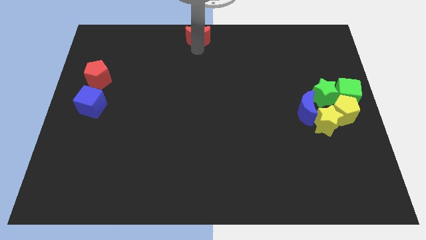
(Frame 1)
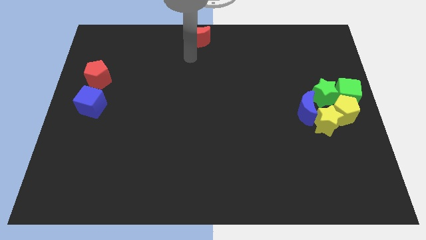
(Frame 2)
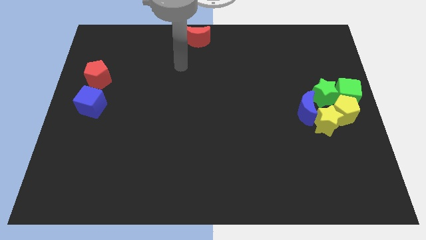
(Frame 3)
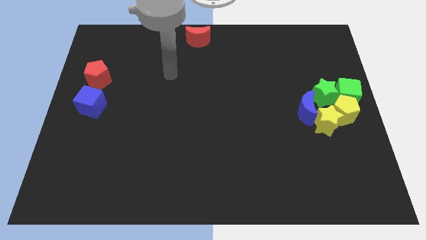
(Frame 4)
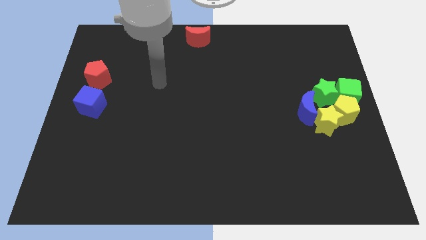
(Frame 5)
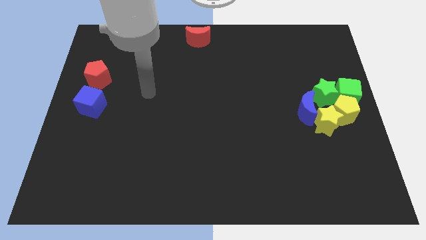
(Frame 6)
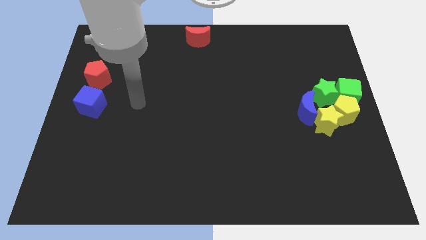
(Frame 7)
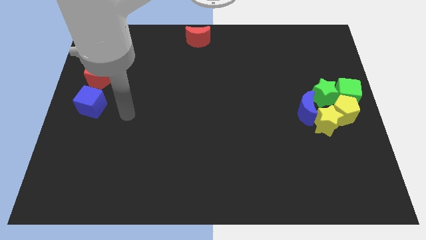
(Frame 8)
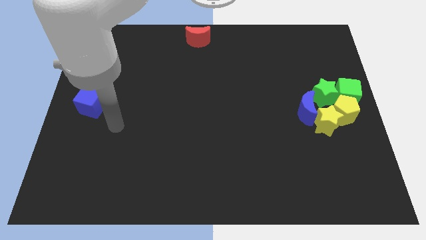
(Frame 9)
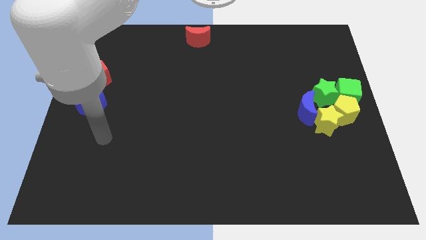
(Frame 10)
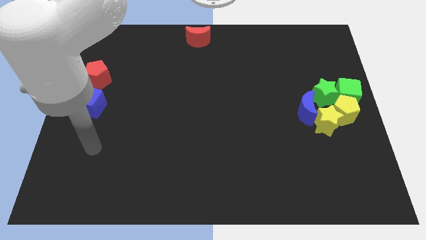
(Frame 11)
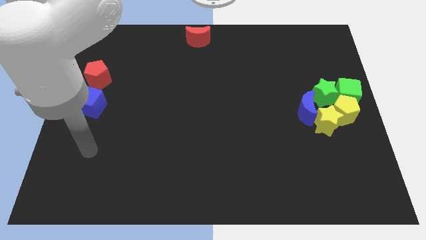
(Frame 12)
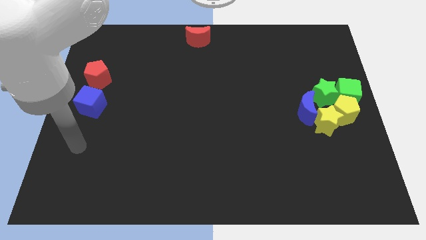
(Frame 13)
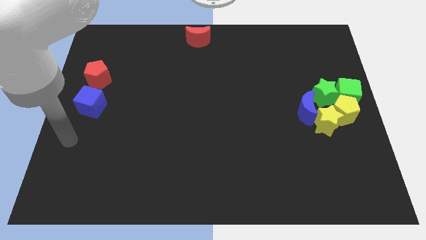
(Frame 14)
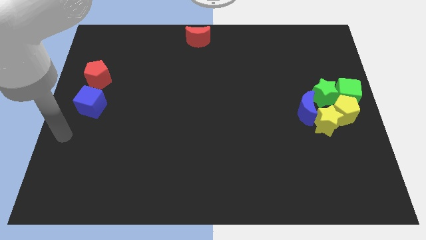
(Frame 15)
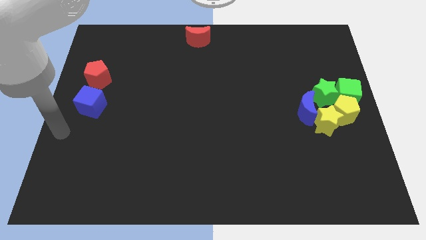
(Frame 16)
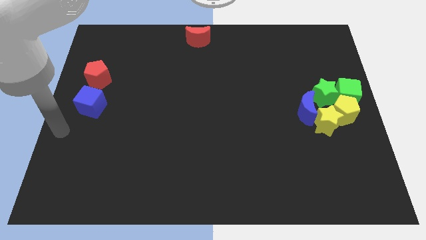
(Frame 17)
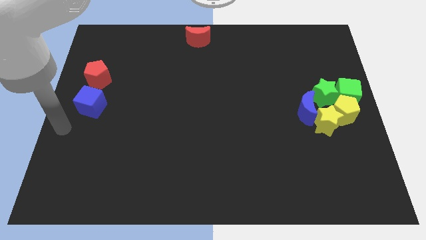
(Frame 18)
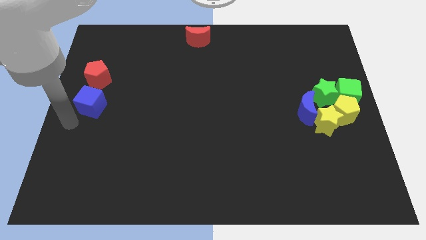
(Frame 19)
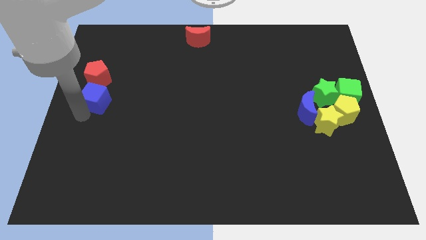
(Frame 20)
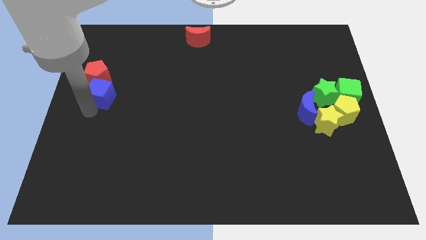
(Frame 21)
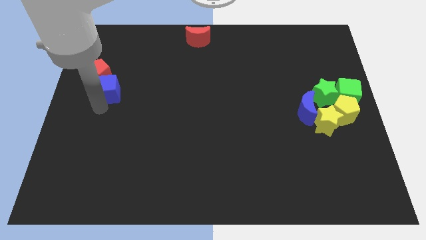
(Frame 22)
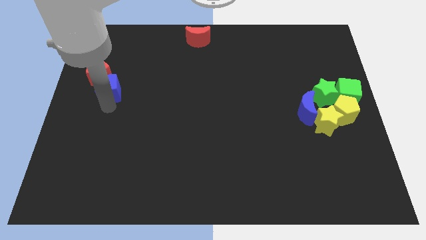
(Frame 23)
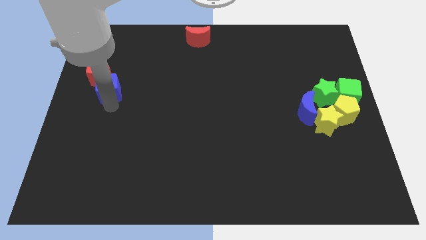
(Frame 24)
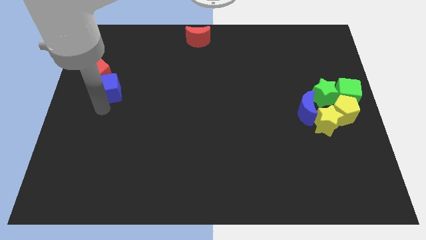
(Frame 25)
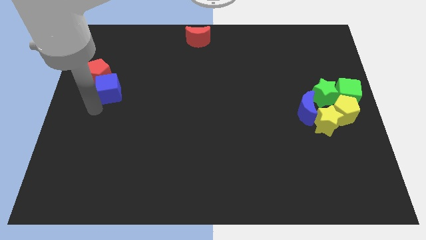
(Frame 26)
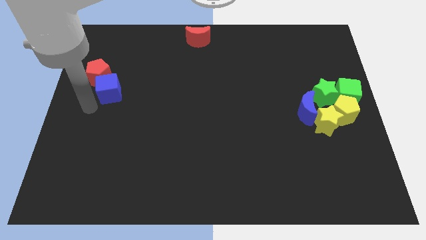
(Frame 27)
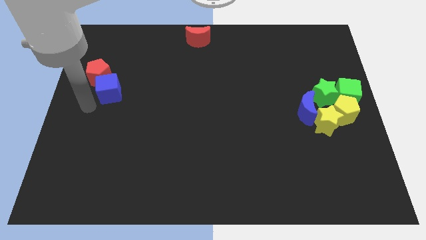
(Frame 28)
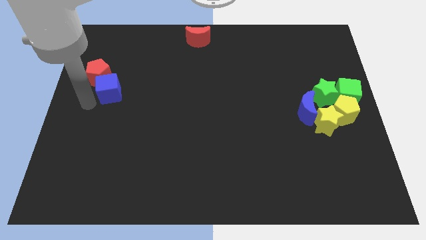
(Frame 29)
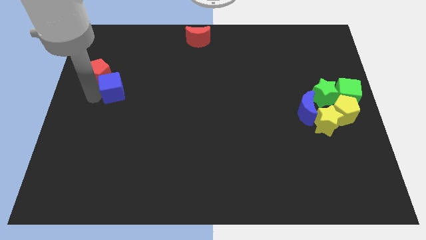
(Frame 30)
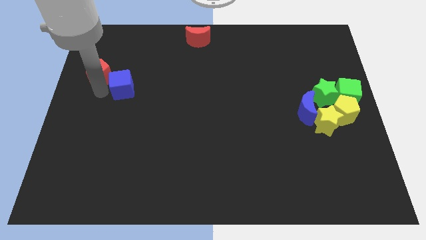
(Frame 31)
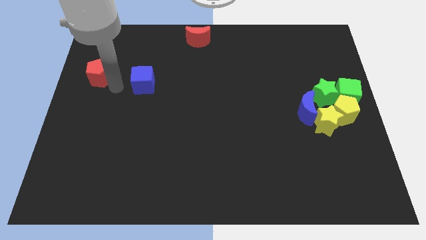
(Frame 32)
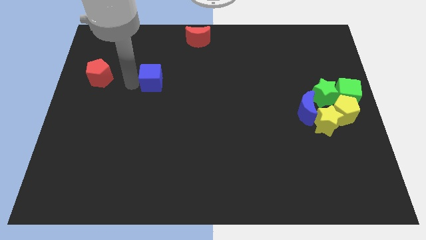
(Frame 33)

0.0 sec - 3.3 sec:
move the blue cube to the right of the red pentagon

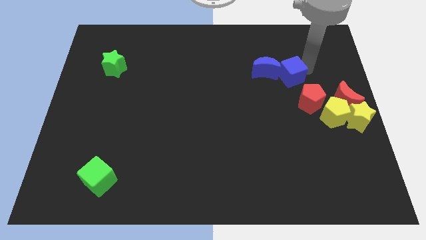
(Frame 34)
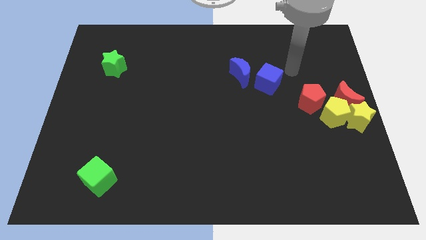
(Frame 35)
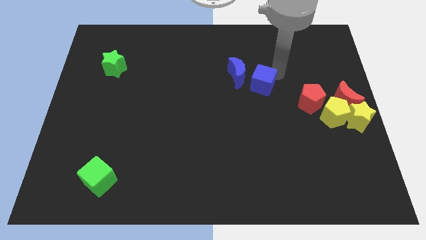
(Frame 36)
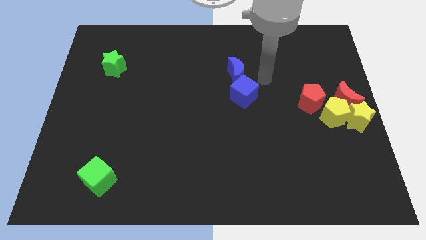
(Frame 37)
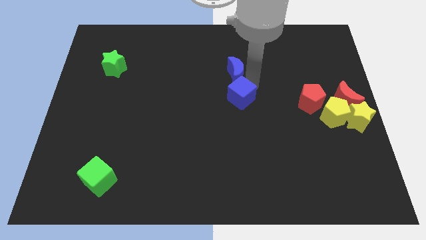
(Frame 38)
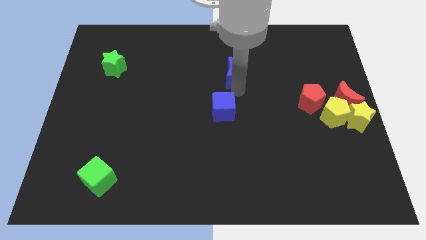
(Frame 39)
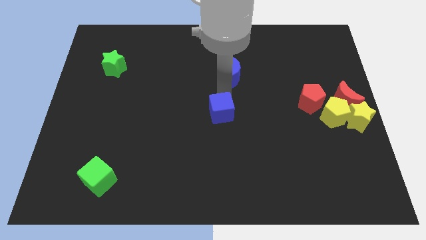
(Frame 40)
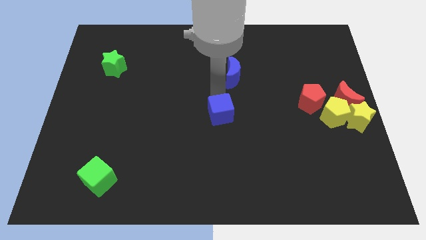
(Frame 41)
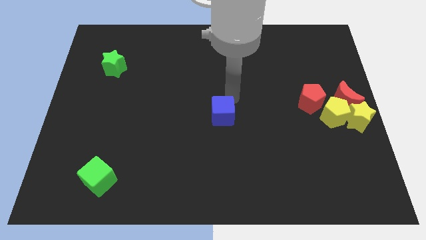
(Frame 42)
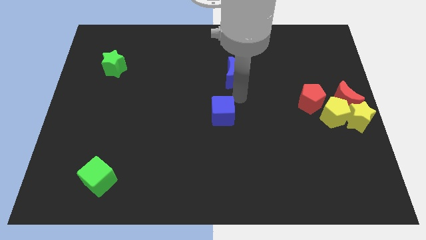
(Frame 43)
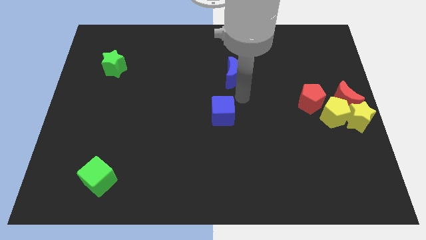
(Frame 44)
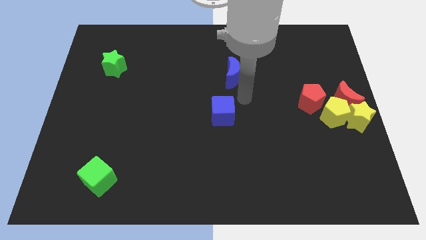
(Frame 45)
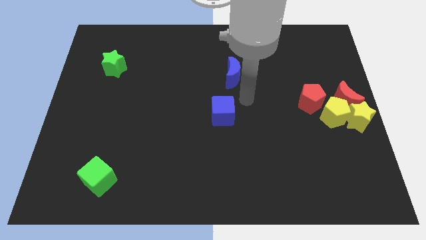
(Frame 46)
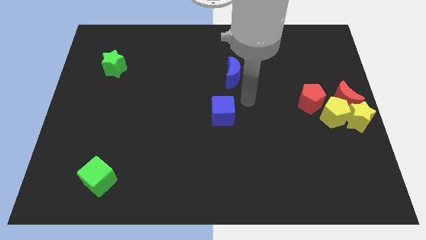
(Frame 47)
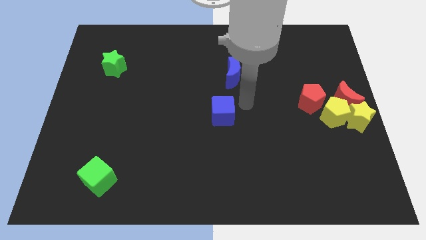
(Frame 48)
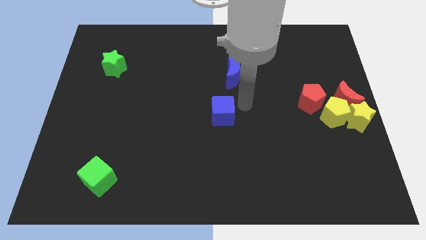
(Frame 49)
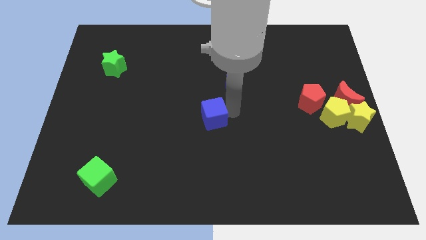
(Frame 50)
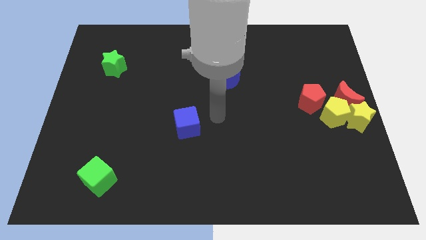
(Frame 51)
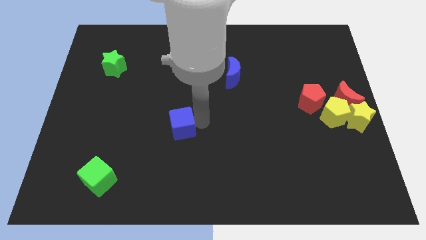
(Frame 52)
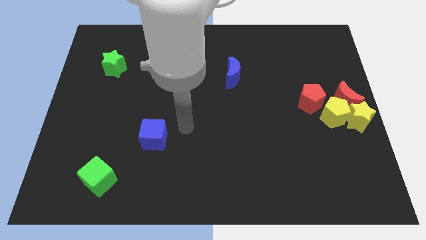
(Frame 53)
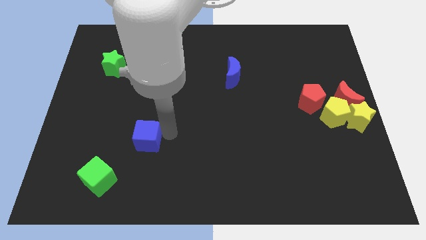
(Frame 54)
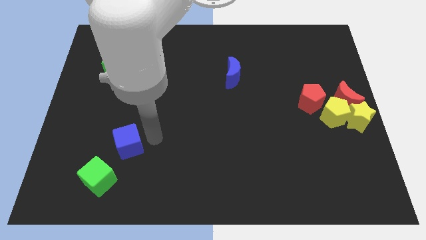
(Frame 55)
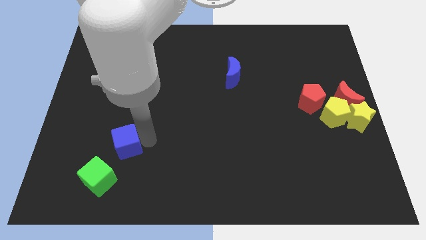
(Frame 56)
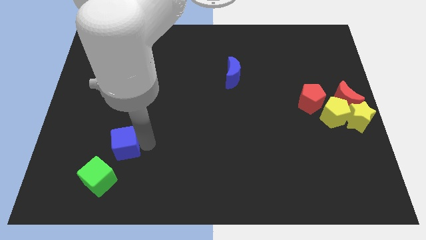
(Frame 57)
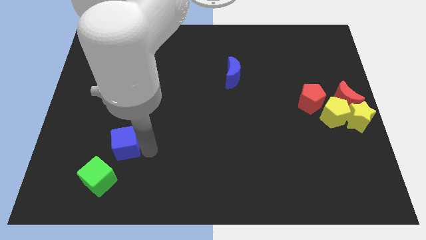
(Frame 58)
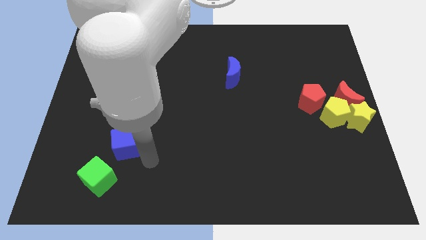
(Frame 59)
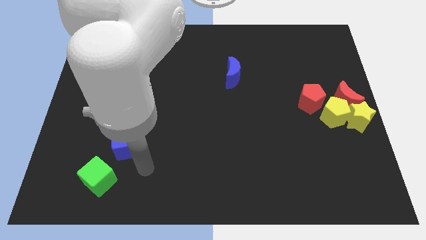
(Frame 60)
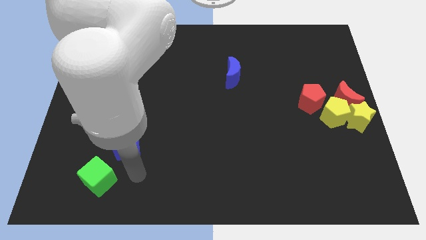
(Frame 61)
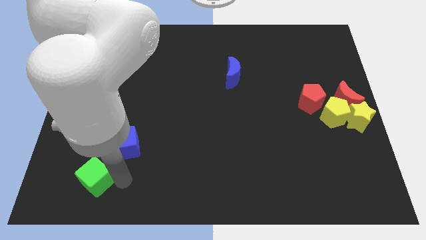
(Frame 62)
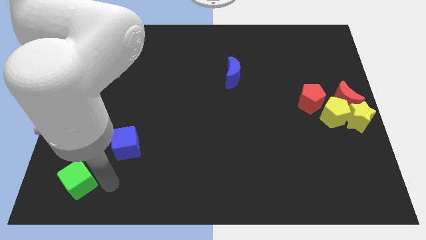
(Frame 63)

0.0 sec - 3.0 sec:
slide the blue cube diagonal bottom left to blue moon

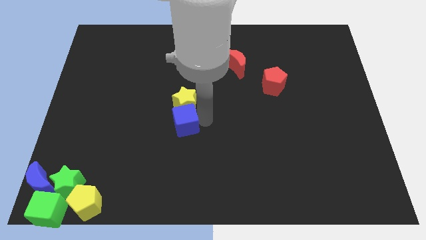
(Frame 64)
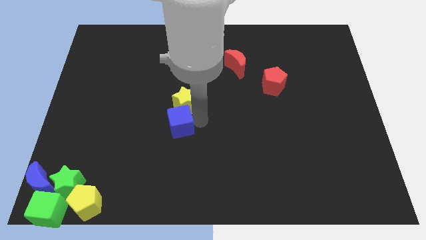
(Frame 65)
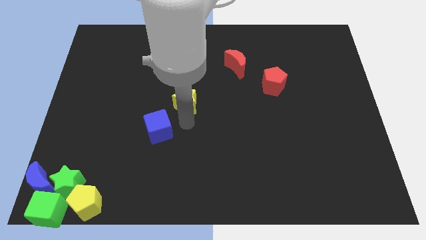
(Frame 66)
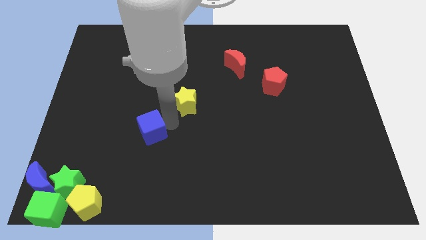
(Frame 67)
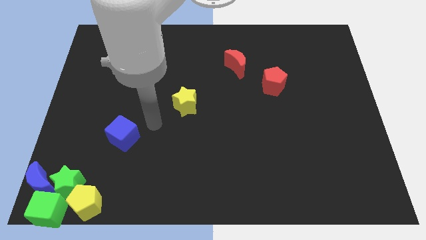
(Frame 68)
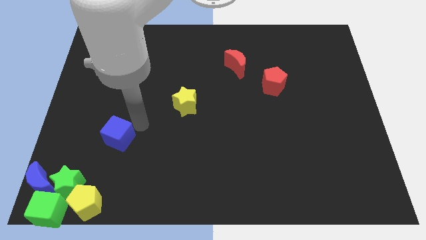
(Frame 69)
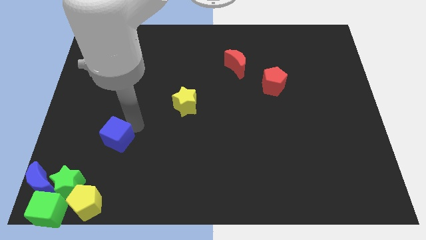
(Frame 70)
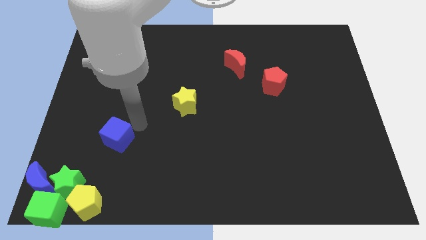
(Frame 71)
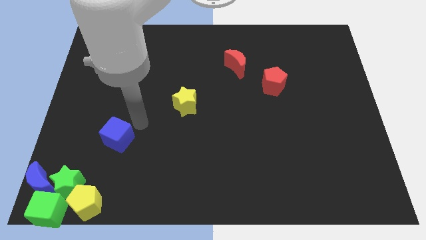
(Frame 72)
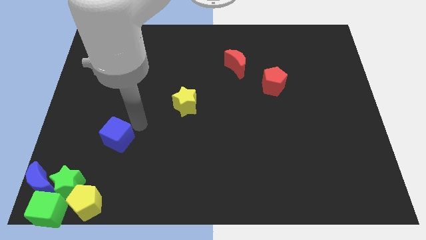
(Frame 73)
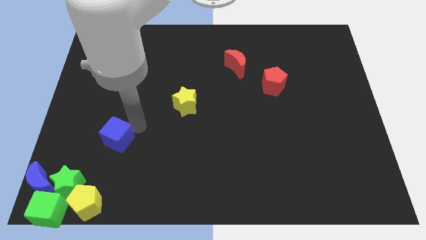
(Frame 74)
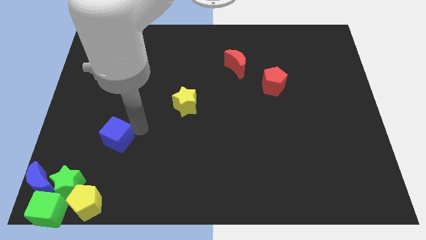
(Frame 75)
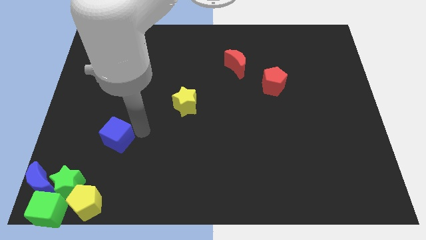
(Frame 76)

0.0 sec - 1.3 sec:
separate the blue cube from the yellow star

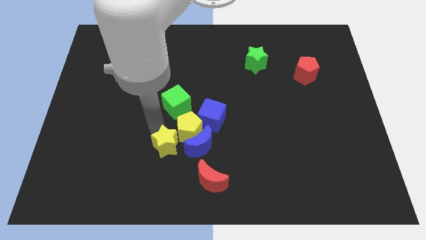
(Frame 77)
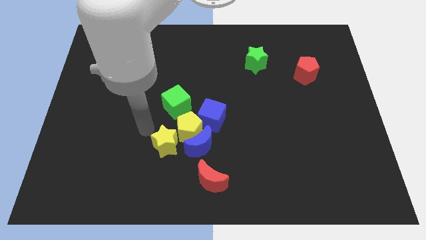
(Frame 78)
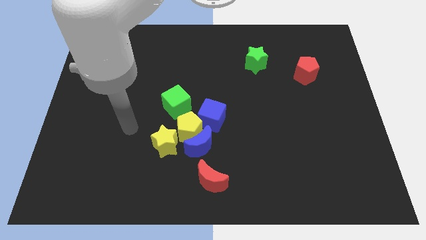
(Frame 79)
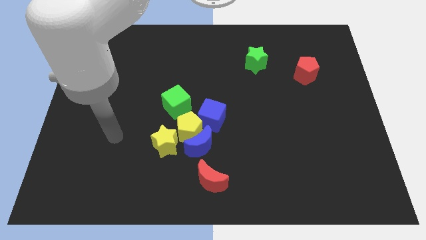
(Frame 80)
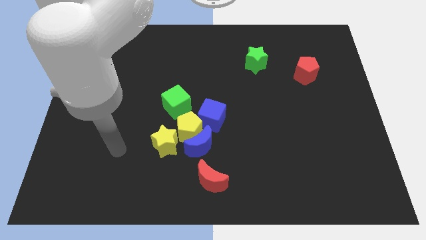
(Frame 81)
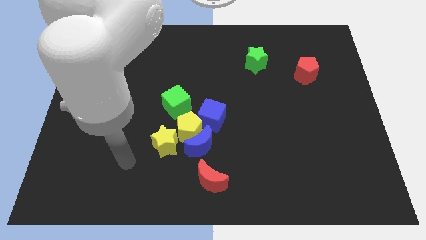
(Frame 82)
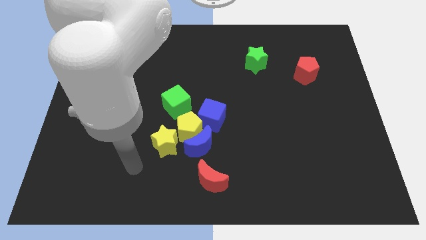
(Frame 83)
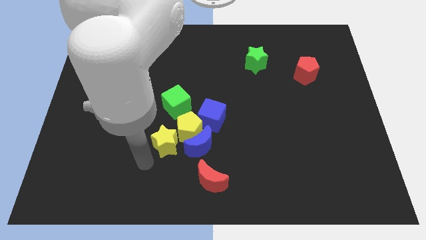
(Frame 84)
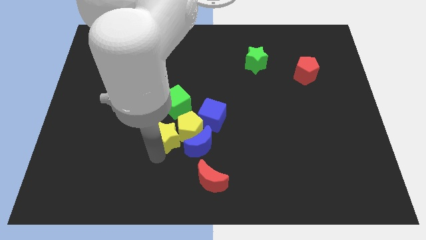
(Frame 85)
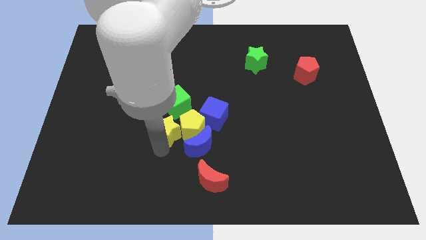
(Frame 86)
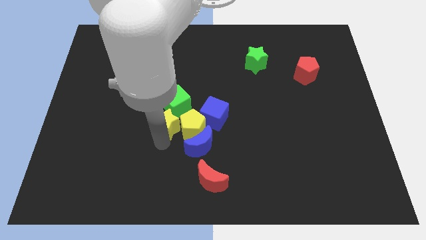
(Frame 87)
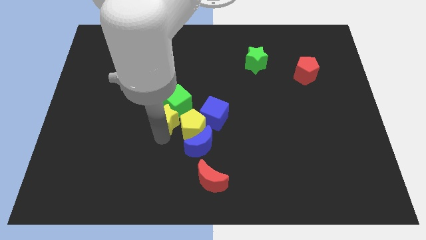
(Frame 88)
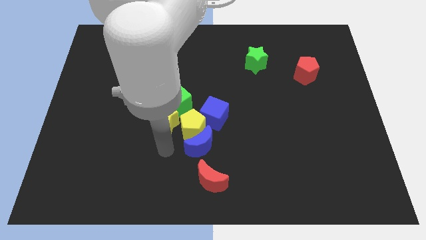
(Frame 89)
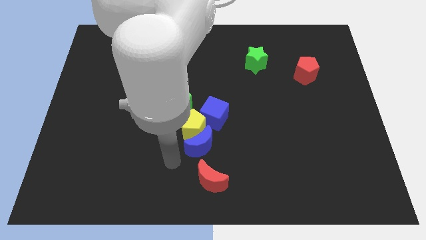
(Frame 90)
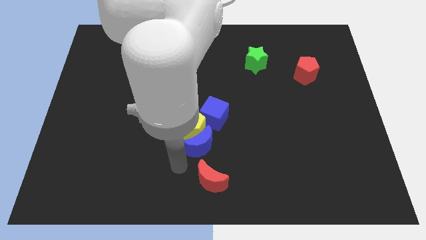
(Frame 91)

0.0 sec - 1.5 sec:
move the yellow star into the green cube
